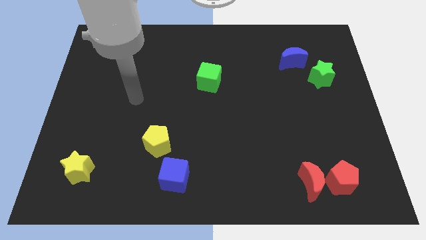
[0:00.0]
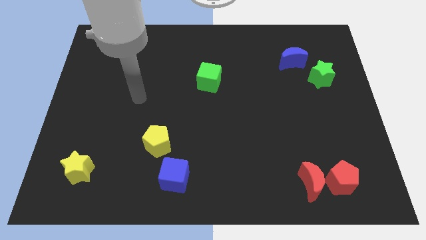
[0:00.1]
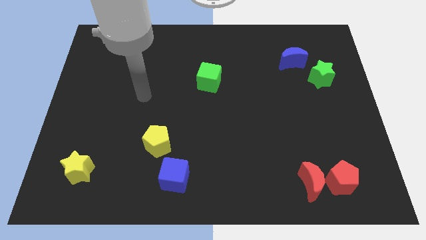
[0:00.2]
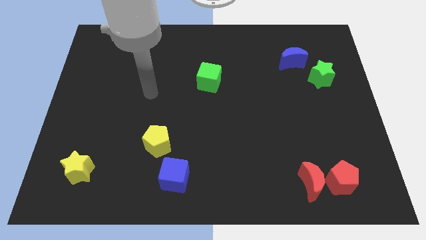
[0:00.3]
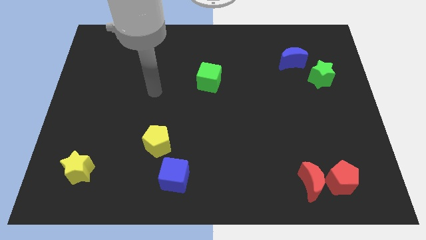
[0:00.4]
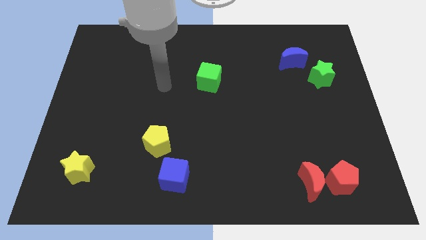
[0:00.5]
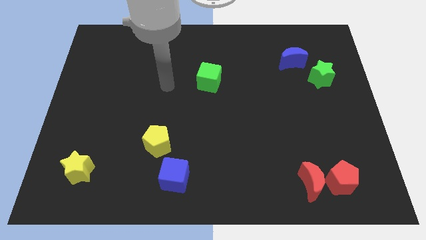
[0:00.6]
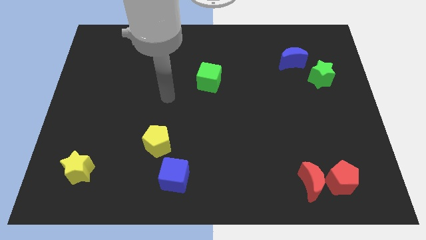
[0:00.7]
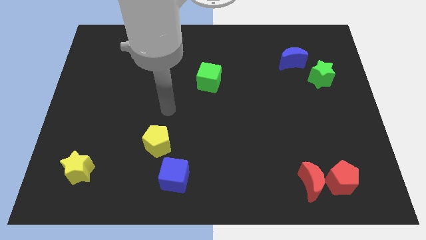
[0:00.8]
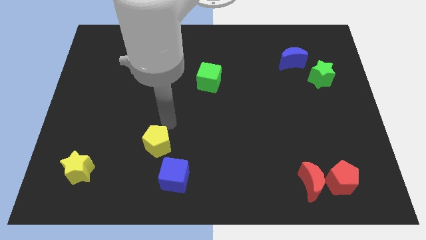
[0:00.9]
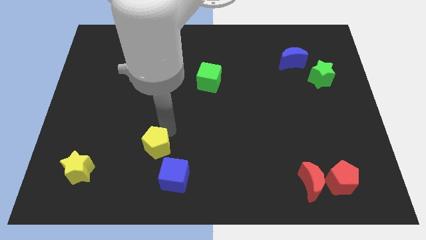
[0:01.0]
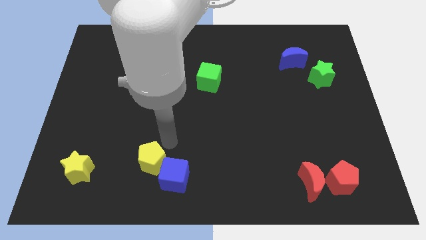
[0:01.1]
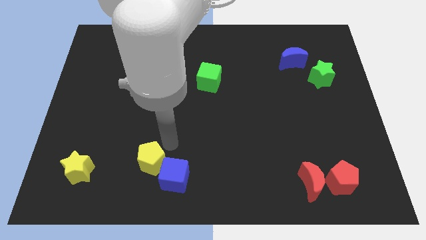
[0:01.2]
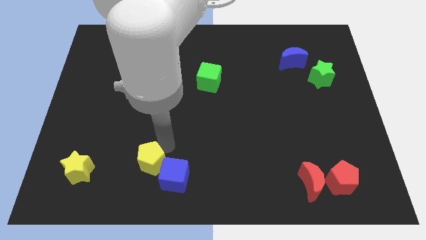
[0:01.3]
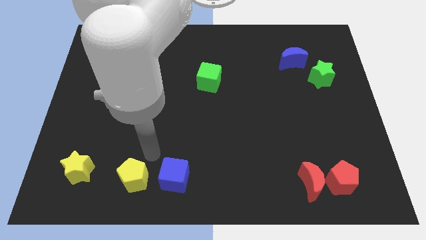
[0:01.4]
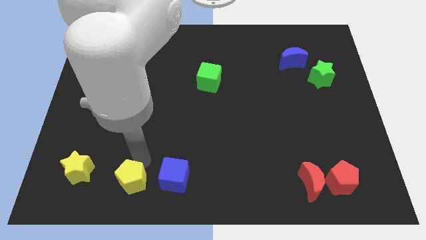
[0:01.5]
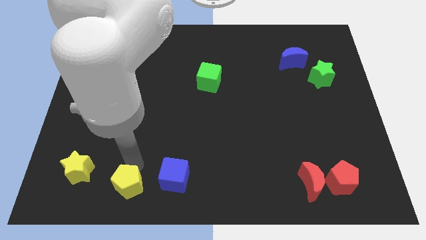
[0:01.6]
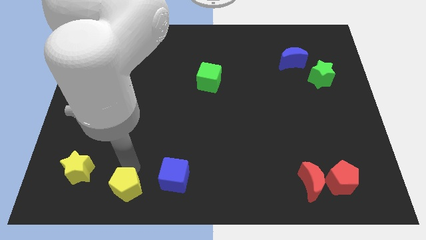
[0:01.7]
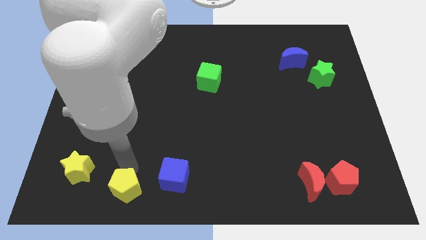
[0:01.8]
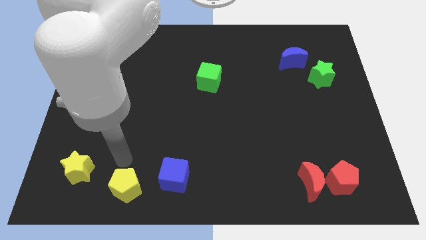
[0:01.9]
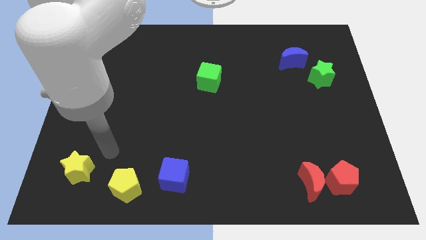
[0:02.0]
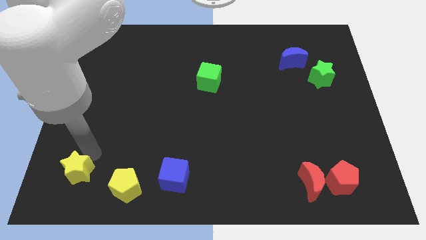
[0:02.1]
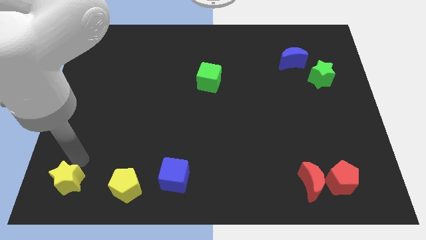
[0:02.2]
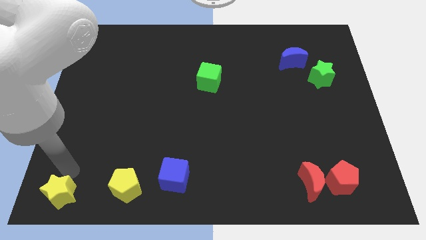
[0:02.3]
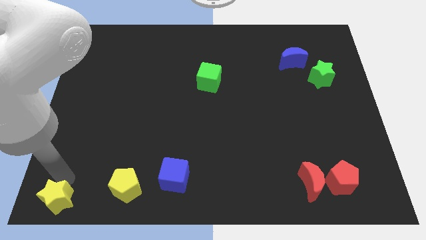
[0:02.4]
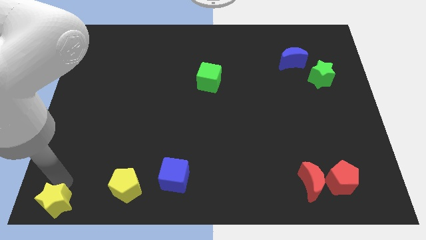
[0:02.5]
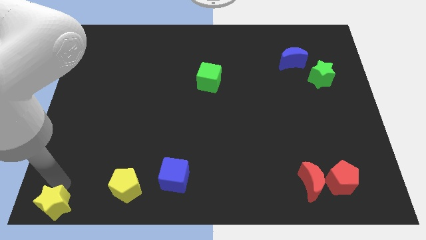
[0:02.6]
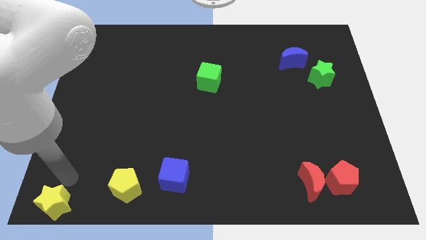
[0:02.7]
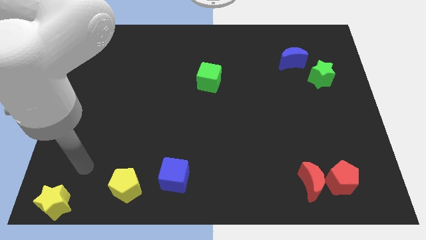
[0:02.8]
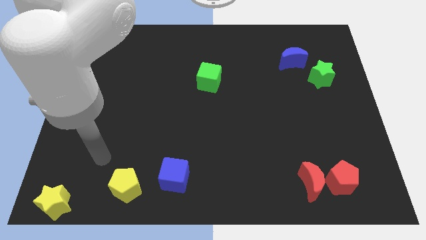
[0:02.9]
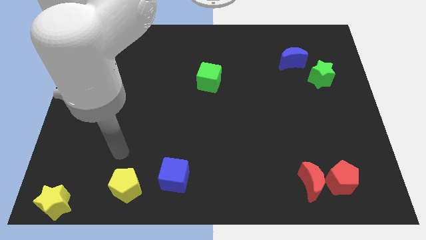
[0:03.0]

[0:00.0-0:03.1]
make a diagonal line with the yellow blocks and blue cube

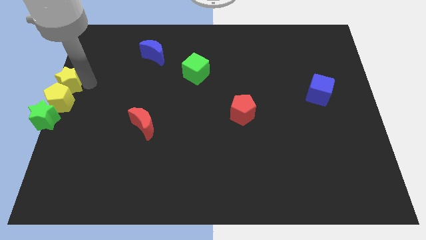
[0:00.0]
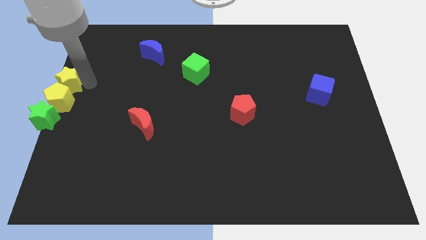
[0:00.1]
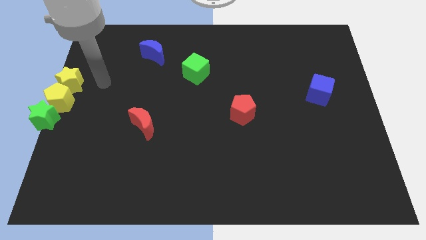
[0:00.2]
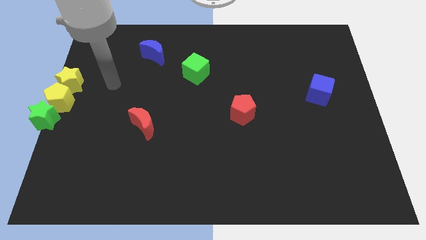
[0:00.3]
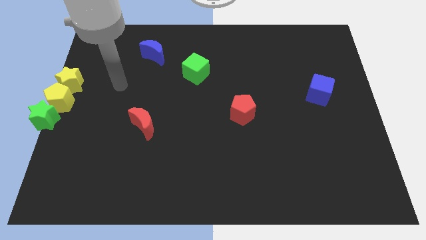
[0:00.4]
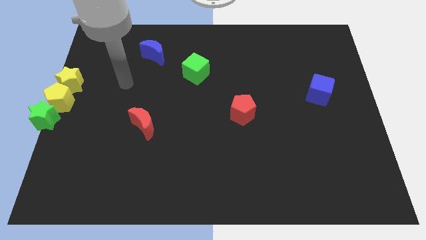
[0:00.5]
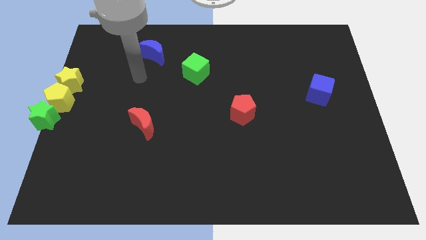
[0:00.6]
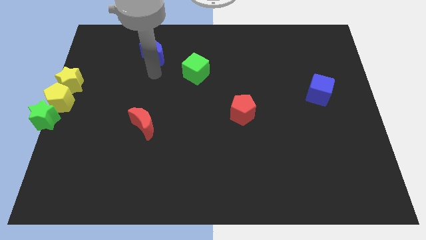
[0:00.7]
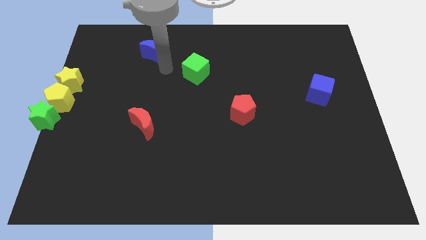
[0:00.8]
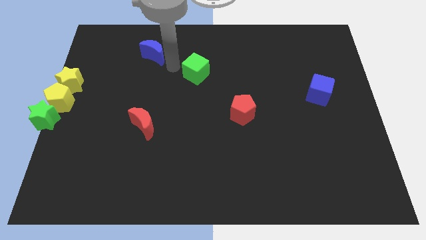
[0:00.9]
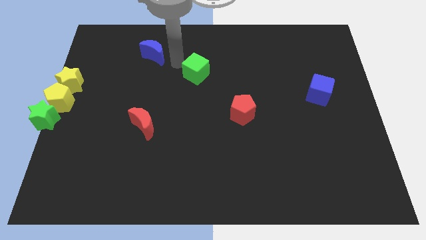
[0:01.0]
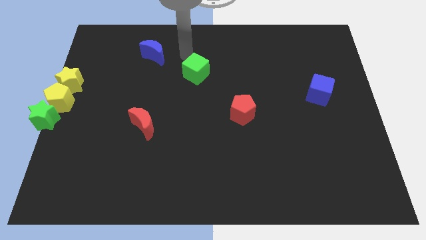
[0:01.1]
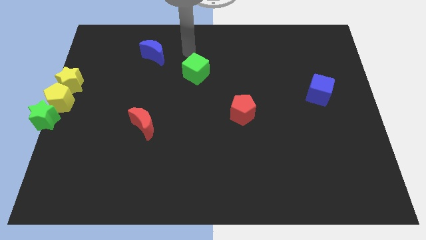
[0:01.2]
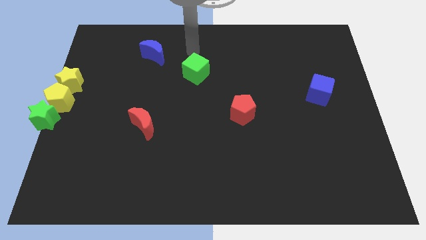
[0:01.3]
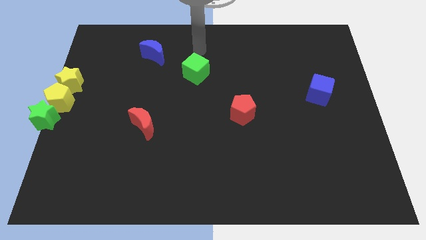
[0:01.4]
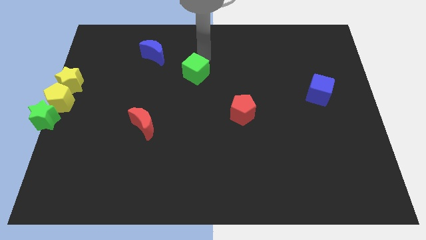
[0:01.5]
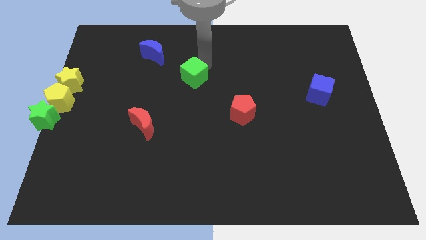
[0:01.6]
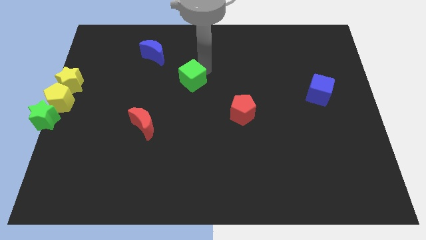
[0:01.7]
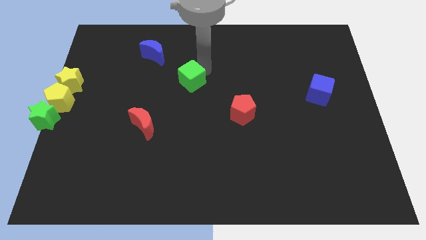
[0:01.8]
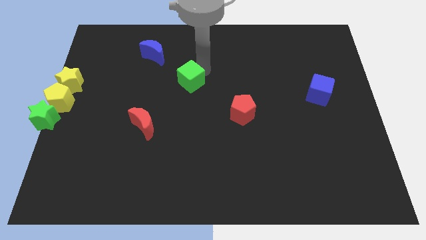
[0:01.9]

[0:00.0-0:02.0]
move the green cube slightly down

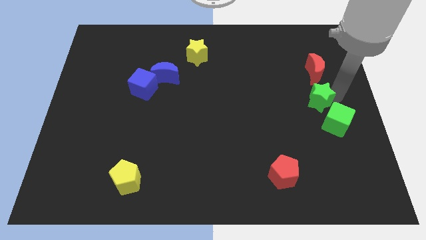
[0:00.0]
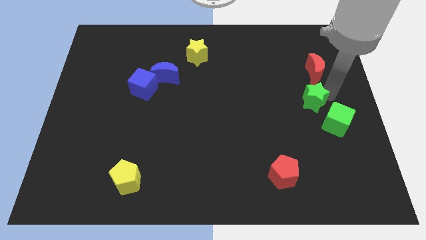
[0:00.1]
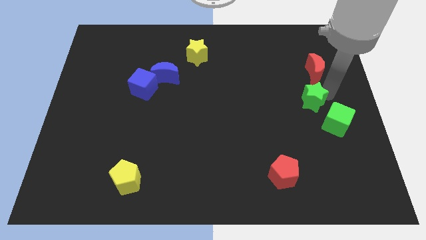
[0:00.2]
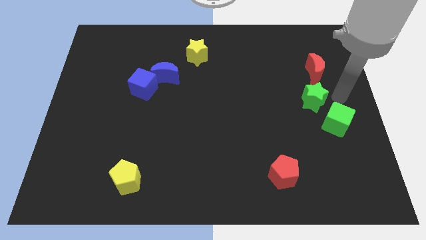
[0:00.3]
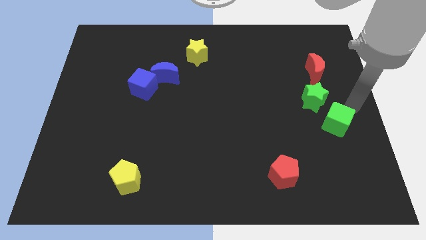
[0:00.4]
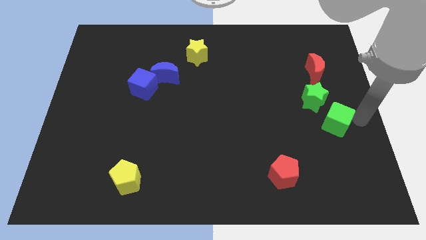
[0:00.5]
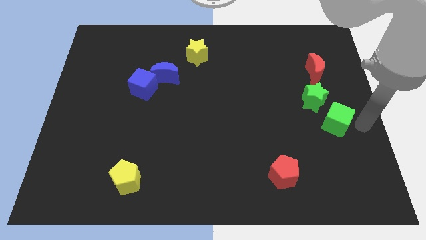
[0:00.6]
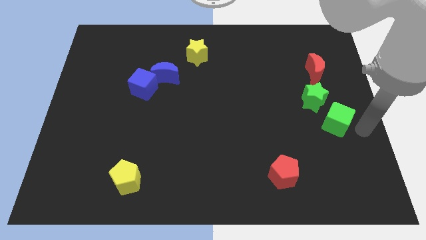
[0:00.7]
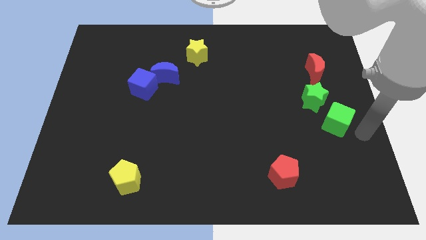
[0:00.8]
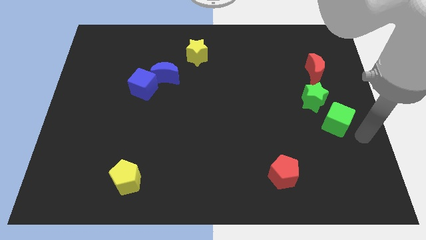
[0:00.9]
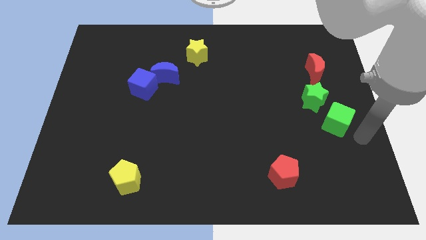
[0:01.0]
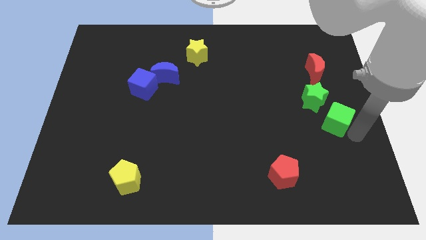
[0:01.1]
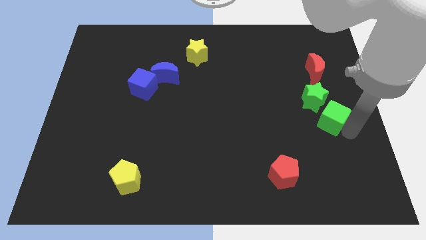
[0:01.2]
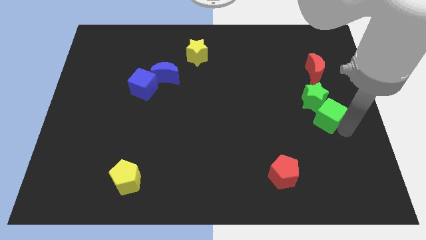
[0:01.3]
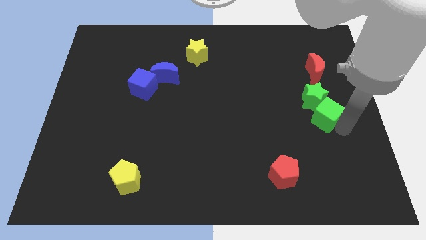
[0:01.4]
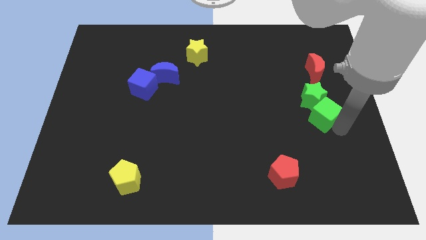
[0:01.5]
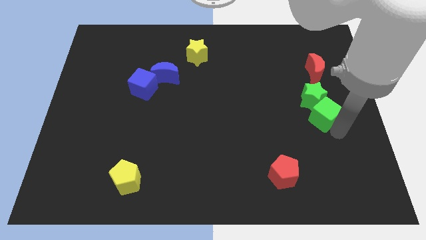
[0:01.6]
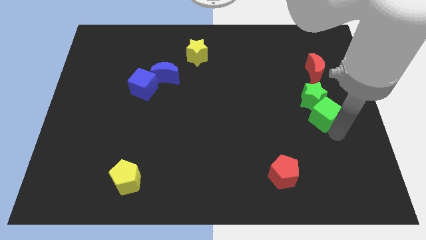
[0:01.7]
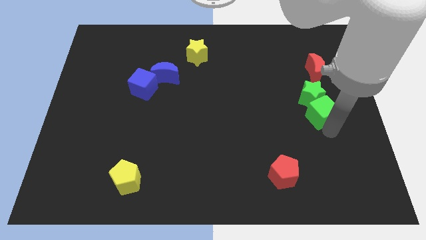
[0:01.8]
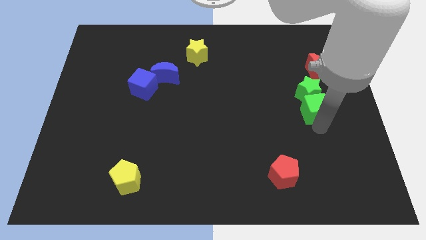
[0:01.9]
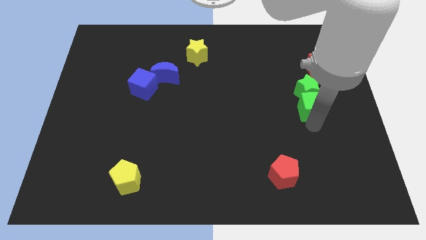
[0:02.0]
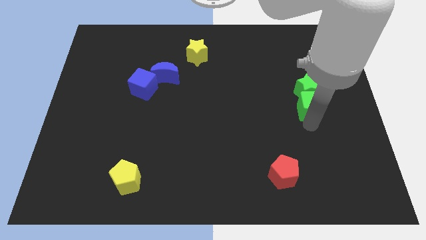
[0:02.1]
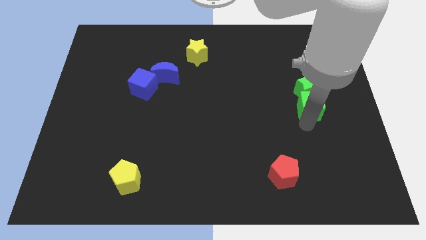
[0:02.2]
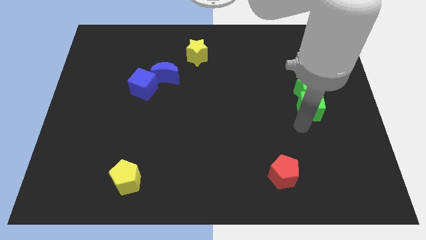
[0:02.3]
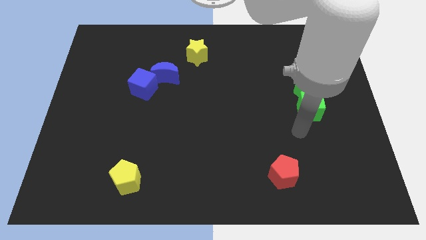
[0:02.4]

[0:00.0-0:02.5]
push the green cube into the green star at bottom

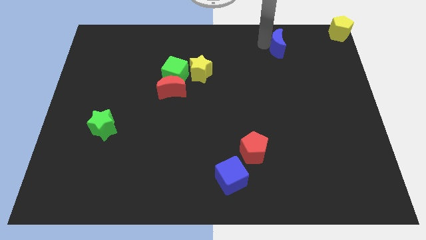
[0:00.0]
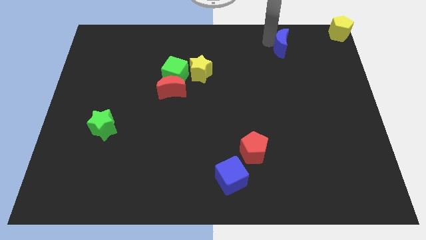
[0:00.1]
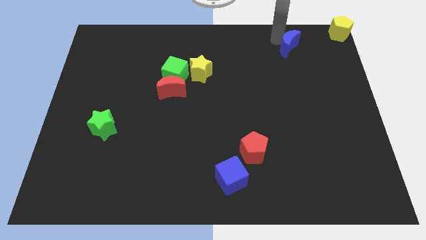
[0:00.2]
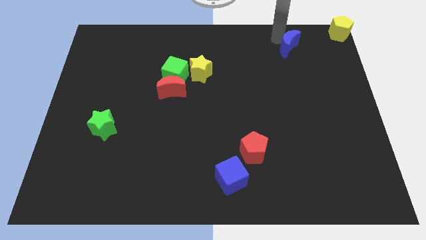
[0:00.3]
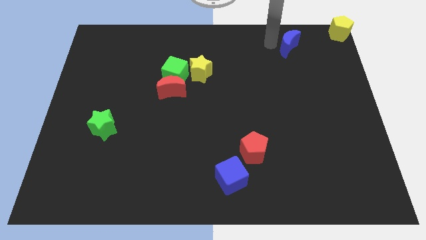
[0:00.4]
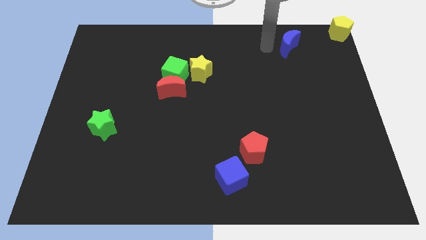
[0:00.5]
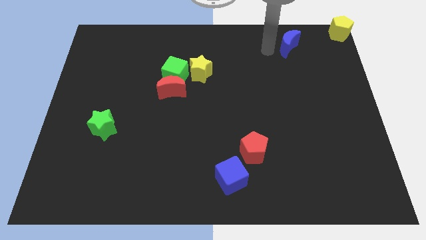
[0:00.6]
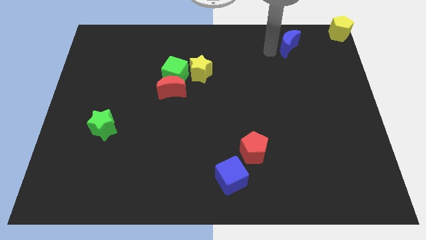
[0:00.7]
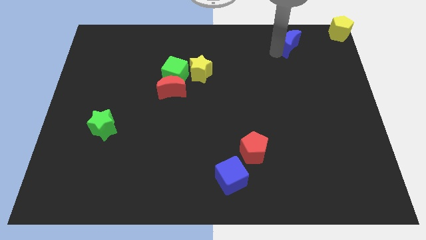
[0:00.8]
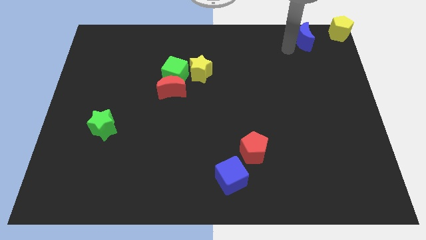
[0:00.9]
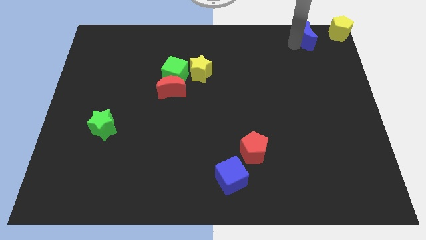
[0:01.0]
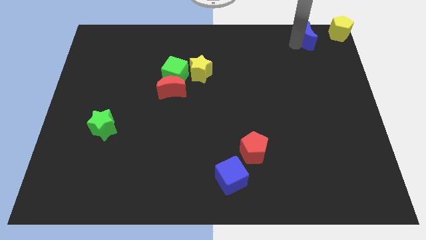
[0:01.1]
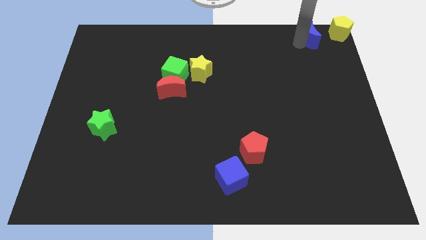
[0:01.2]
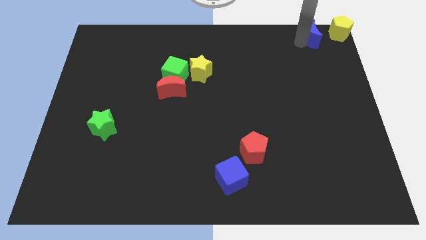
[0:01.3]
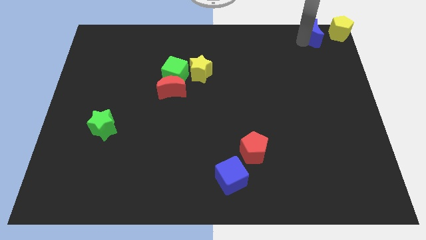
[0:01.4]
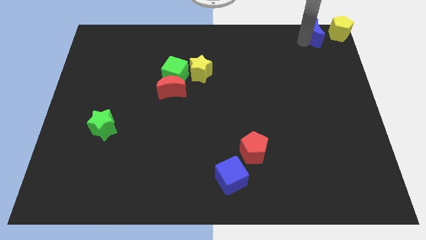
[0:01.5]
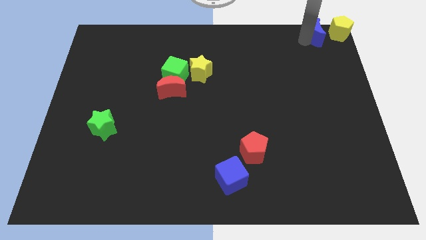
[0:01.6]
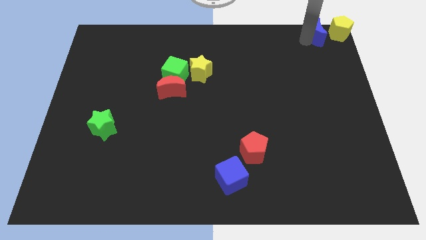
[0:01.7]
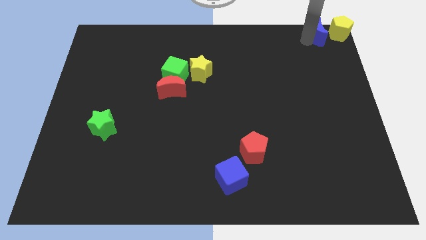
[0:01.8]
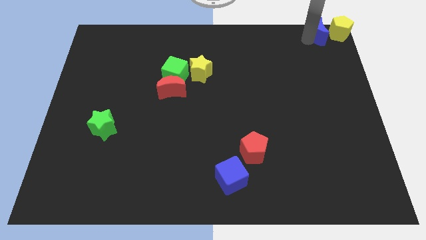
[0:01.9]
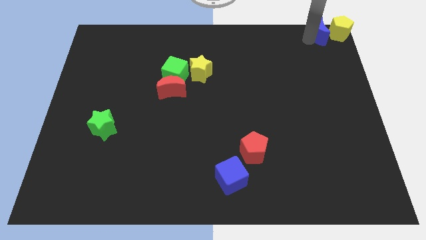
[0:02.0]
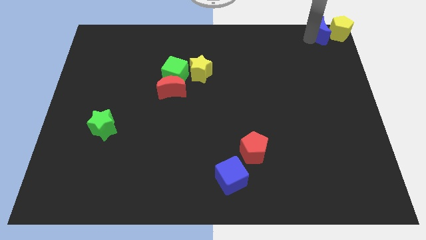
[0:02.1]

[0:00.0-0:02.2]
place blue crescent at the left of yellow pentagon
